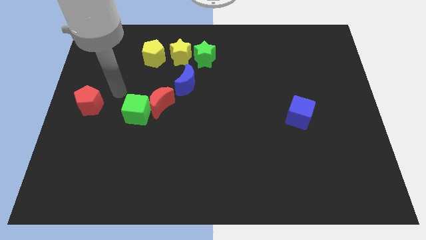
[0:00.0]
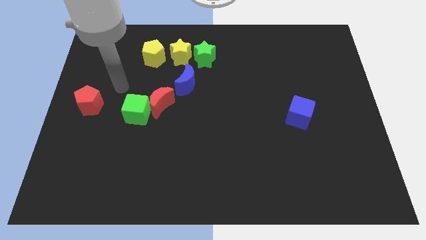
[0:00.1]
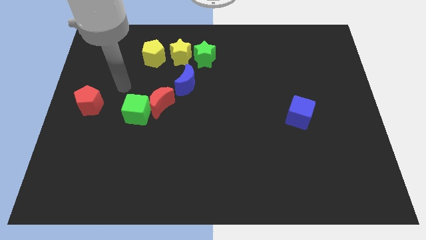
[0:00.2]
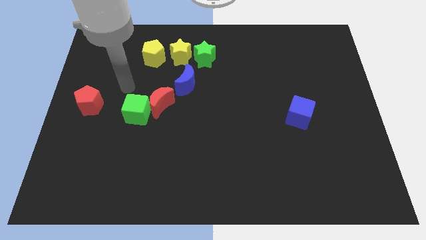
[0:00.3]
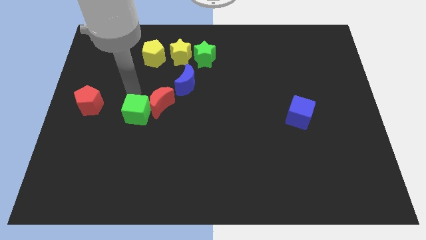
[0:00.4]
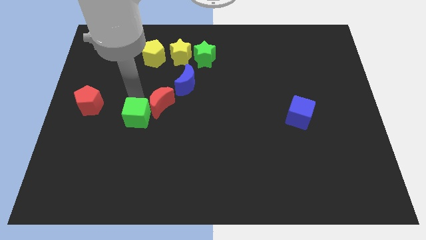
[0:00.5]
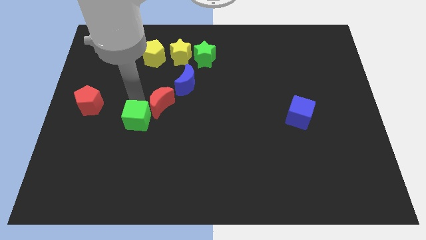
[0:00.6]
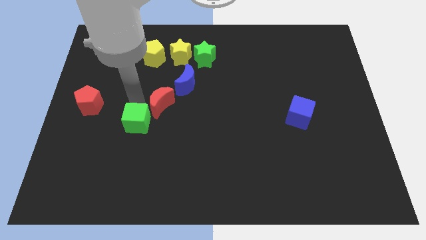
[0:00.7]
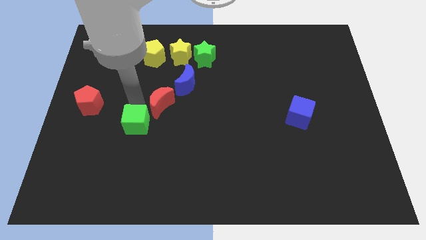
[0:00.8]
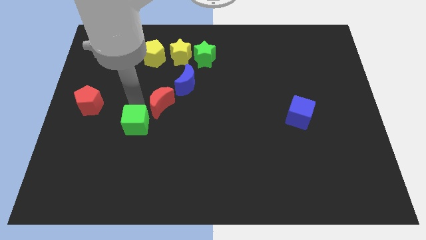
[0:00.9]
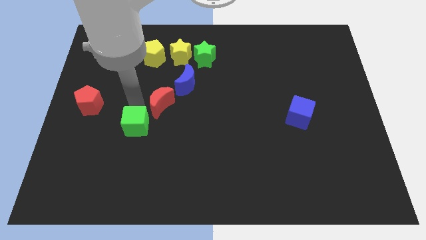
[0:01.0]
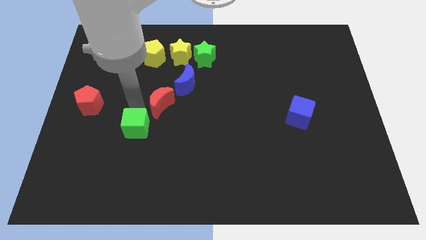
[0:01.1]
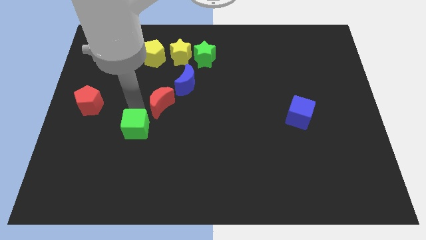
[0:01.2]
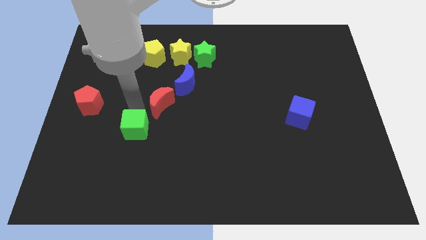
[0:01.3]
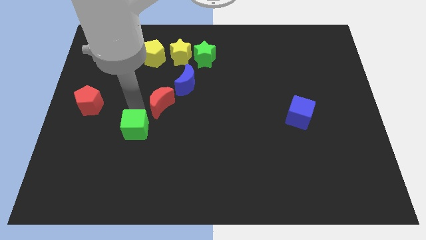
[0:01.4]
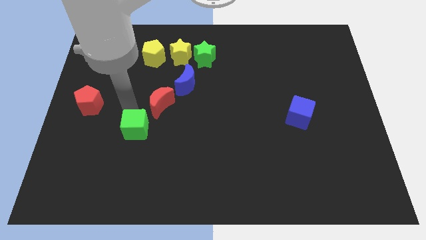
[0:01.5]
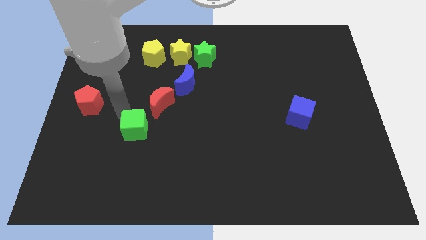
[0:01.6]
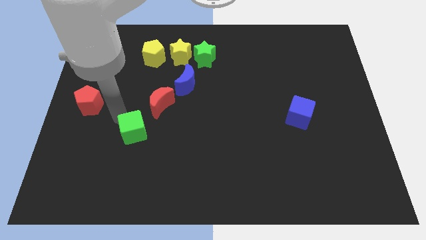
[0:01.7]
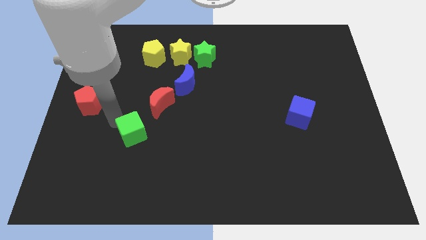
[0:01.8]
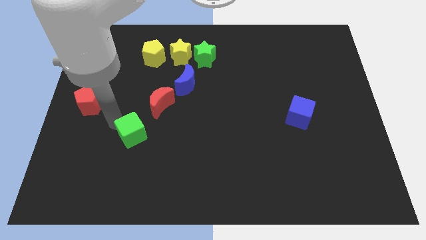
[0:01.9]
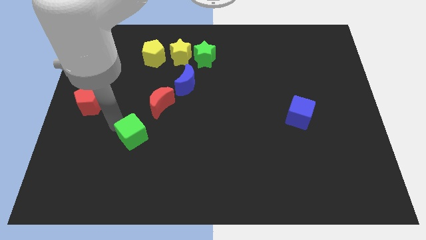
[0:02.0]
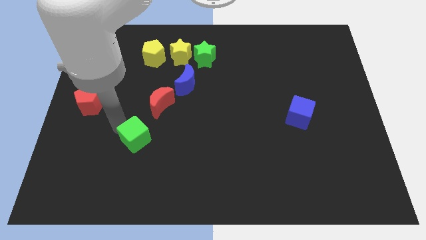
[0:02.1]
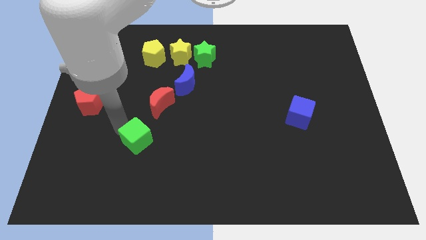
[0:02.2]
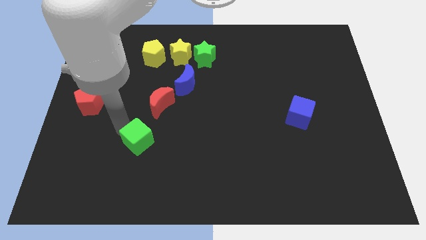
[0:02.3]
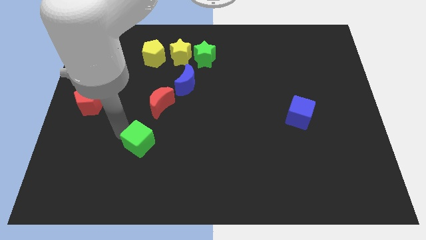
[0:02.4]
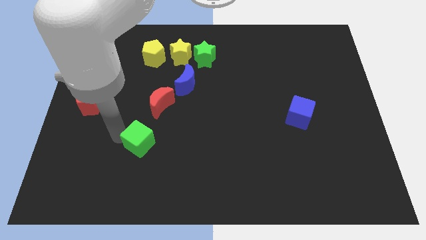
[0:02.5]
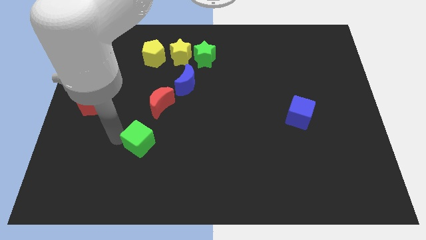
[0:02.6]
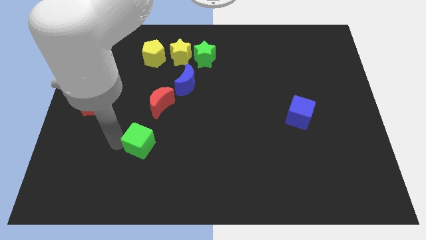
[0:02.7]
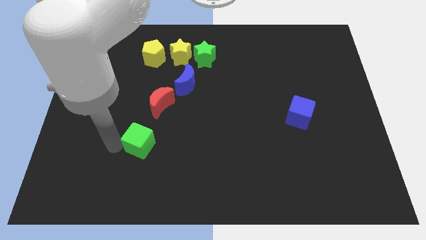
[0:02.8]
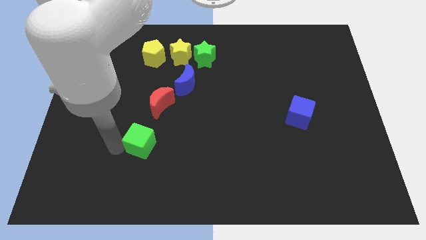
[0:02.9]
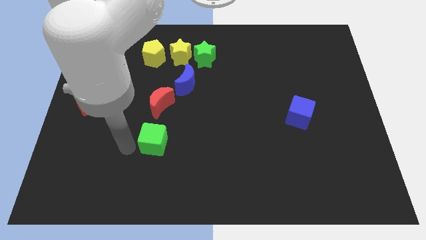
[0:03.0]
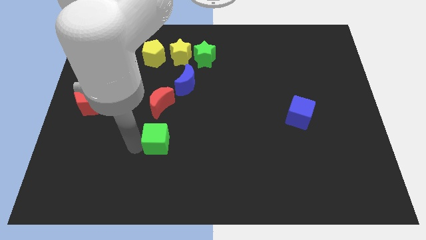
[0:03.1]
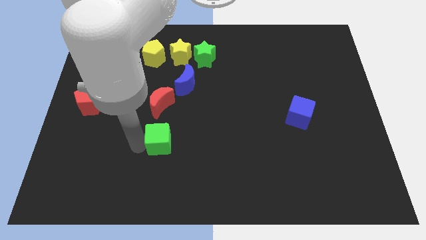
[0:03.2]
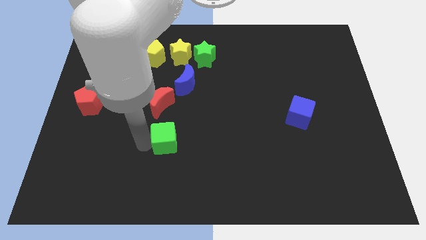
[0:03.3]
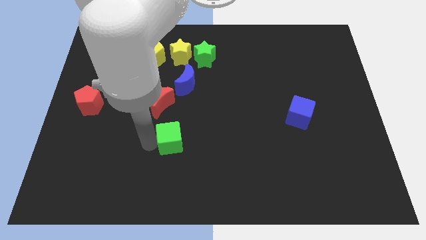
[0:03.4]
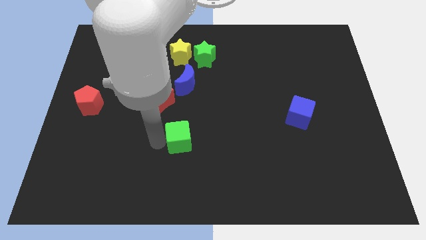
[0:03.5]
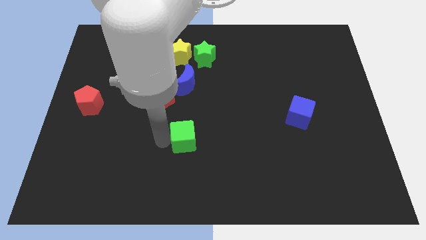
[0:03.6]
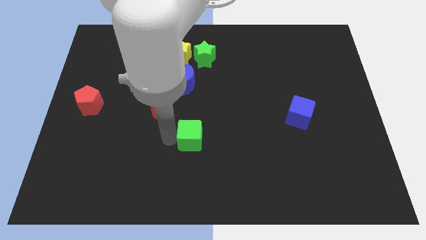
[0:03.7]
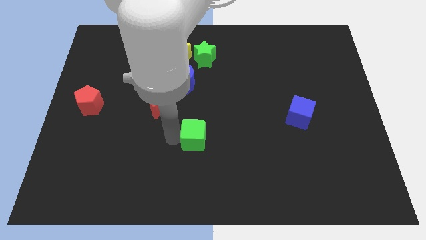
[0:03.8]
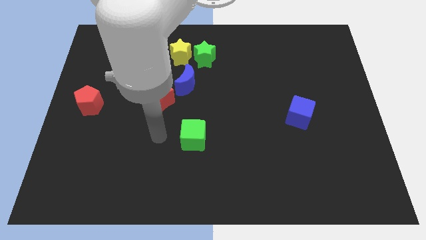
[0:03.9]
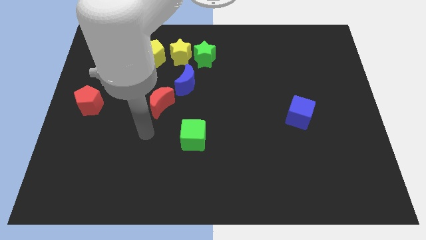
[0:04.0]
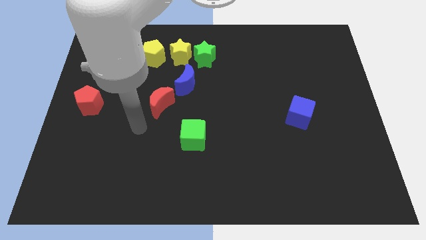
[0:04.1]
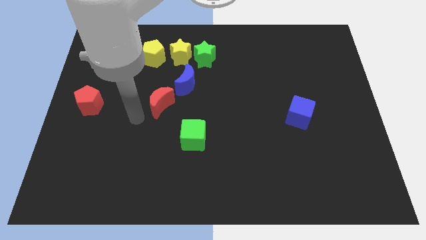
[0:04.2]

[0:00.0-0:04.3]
push the green cube towards the center of board

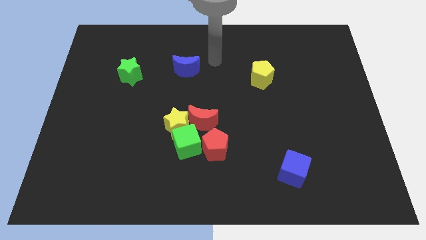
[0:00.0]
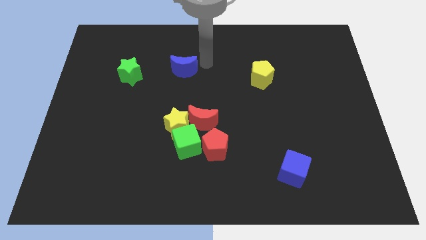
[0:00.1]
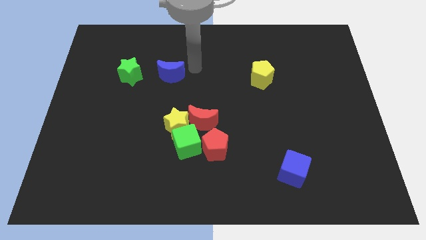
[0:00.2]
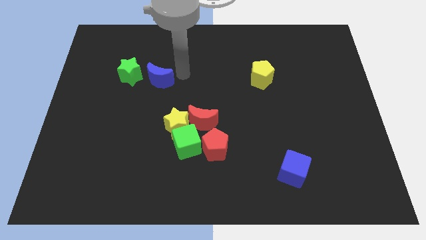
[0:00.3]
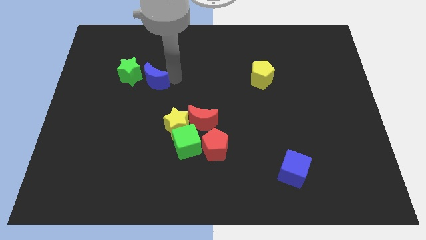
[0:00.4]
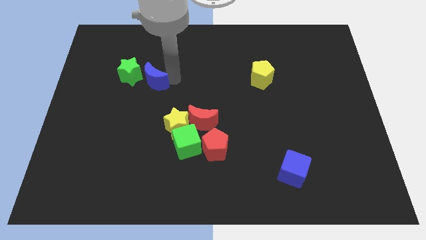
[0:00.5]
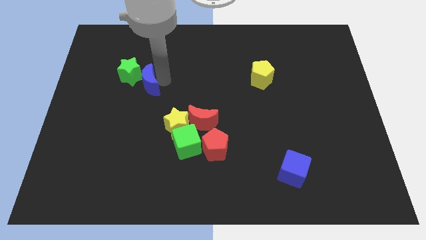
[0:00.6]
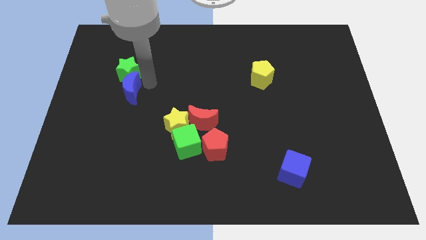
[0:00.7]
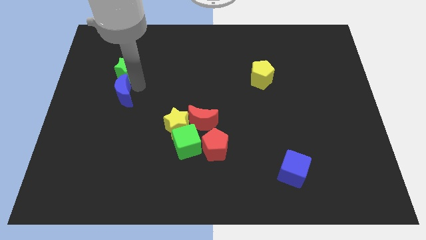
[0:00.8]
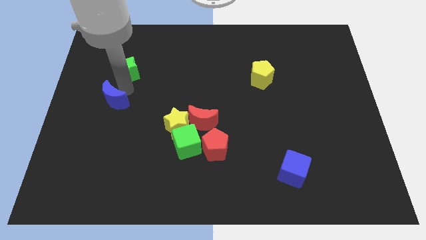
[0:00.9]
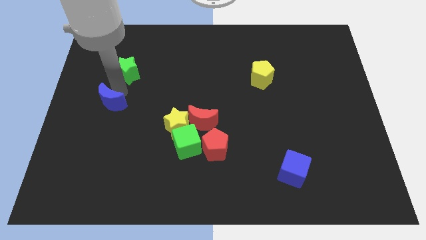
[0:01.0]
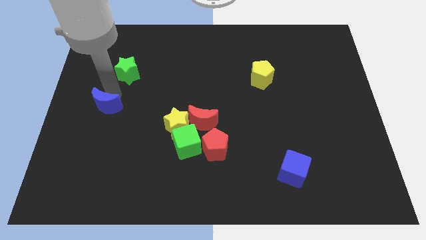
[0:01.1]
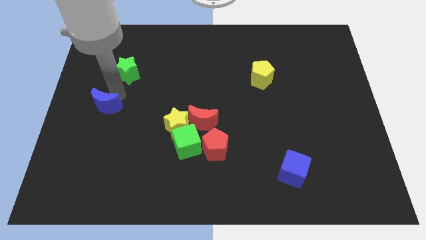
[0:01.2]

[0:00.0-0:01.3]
place the blue crescent vertically below the green star

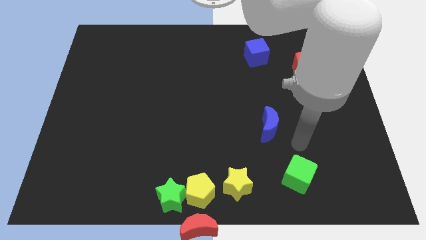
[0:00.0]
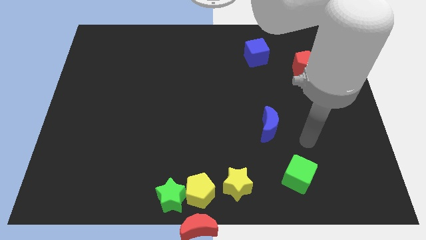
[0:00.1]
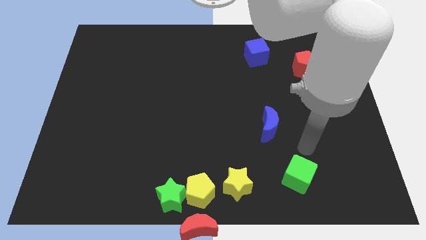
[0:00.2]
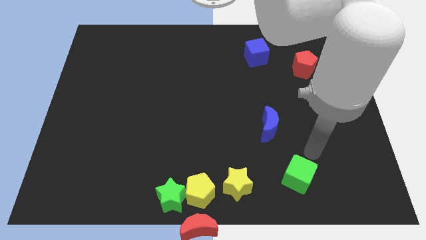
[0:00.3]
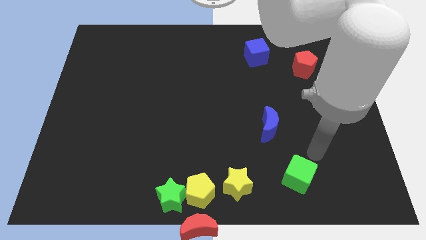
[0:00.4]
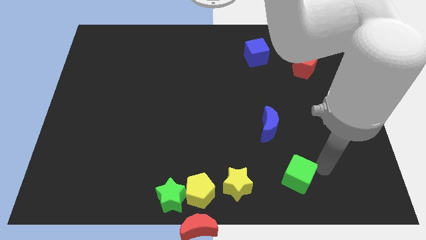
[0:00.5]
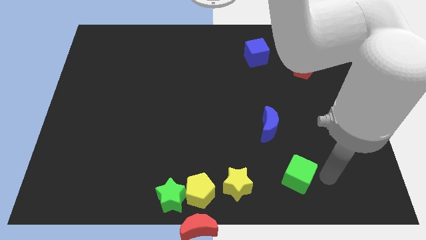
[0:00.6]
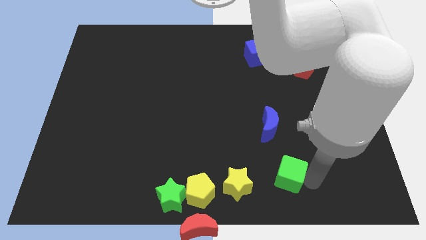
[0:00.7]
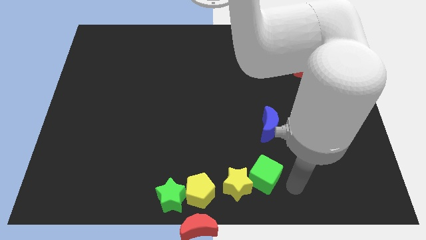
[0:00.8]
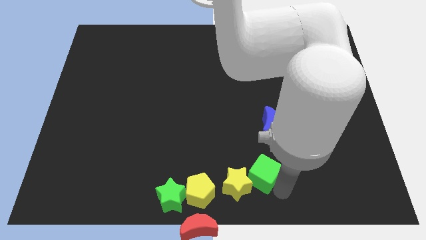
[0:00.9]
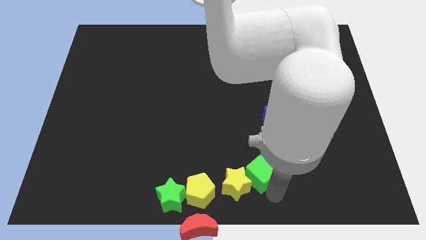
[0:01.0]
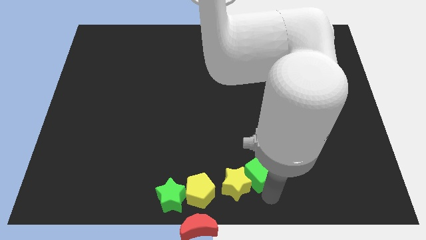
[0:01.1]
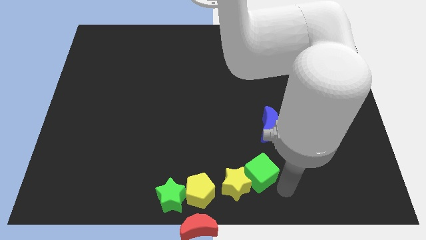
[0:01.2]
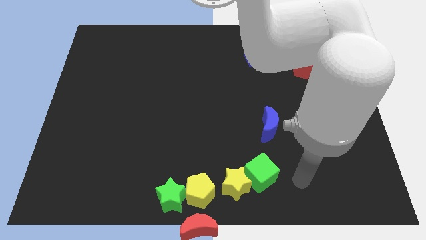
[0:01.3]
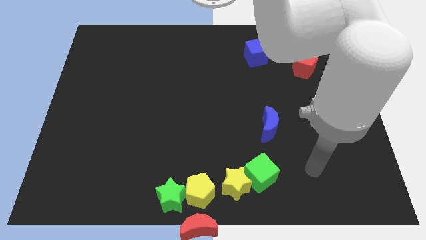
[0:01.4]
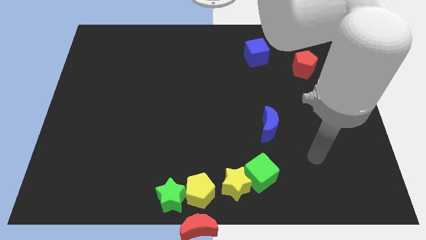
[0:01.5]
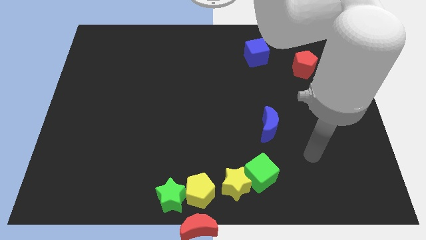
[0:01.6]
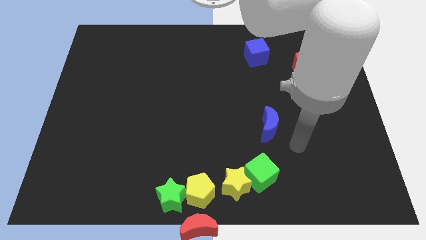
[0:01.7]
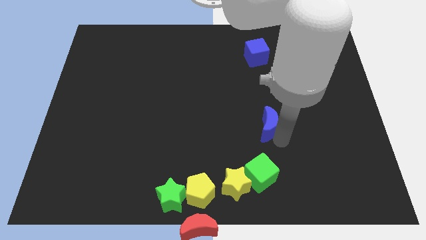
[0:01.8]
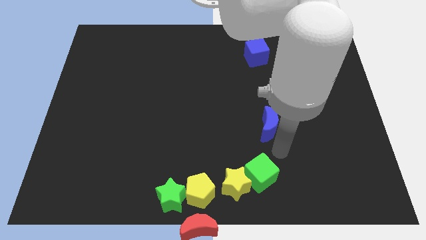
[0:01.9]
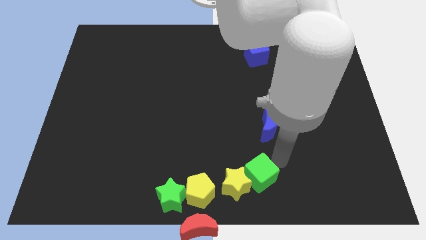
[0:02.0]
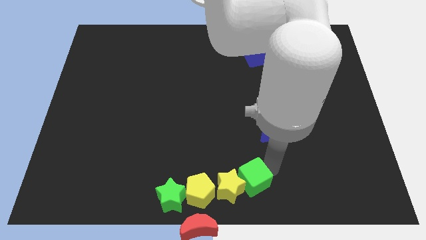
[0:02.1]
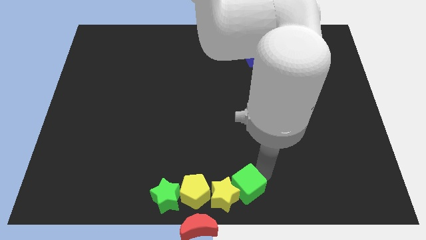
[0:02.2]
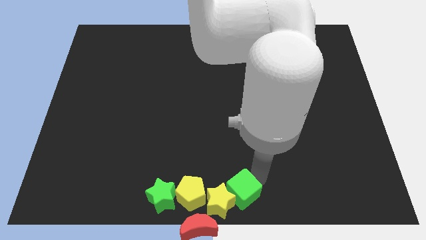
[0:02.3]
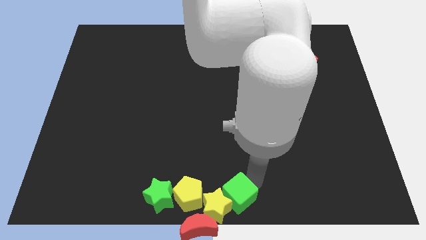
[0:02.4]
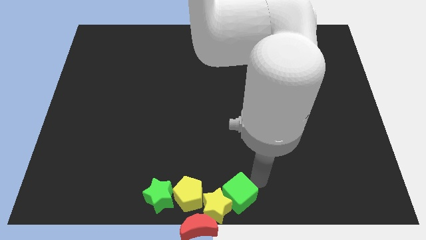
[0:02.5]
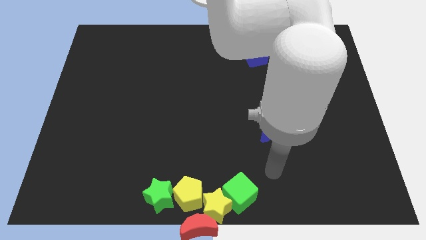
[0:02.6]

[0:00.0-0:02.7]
move the yellow star into the yellow pentagon

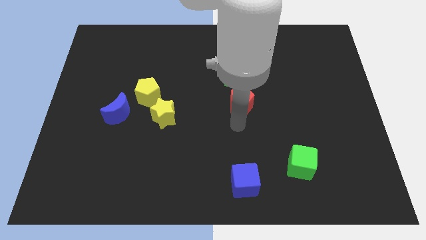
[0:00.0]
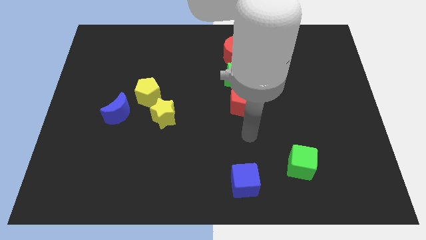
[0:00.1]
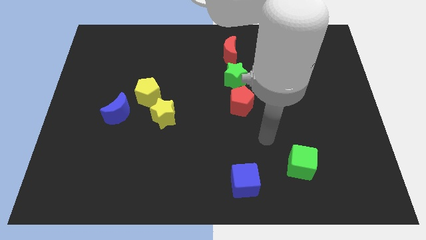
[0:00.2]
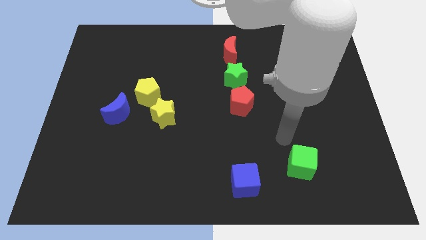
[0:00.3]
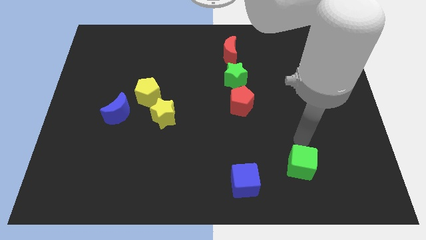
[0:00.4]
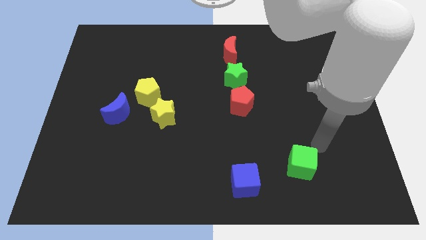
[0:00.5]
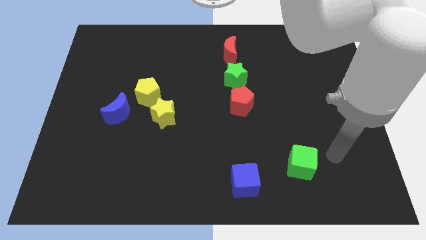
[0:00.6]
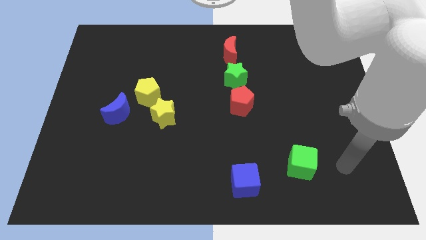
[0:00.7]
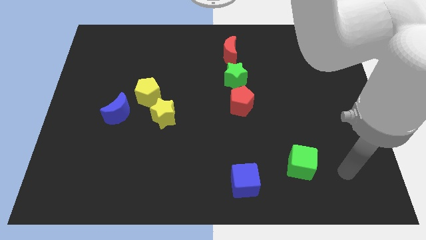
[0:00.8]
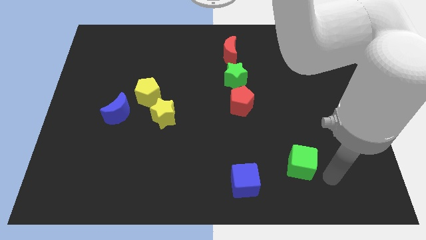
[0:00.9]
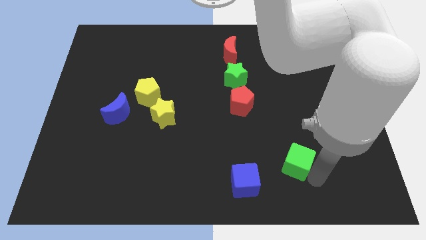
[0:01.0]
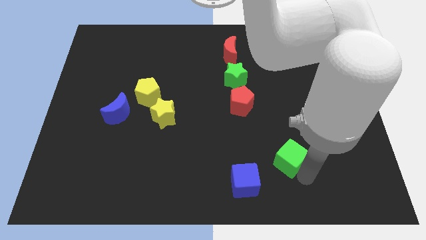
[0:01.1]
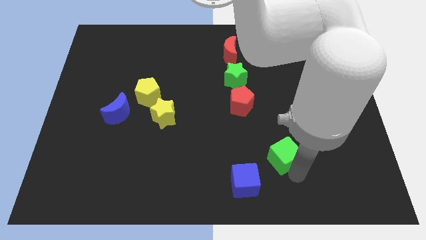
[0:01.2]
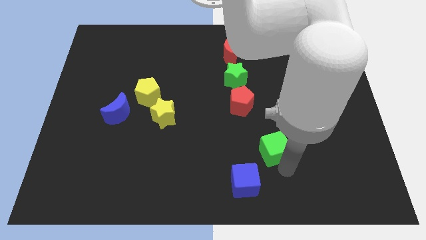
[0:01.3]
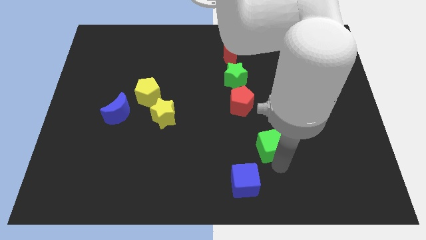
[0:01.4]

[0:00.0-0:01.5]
push the green cube to the top right of the blue cube
